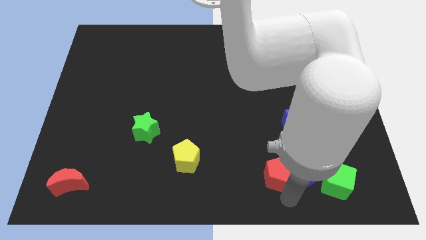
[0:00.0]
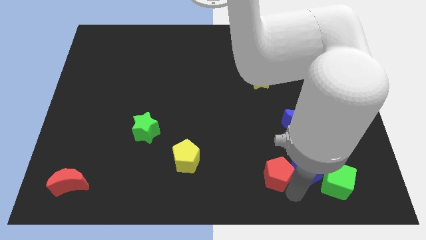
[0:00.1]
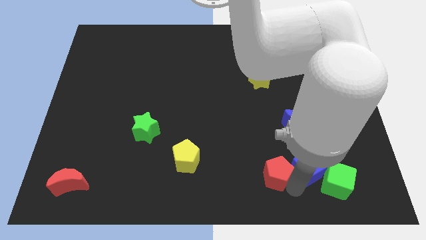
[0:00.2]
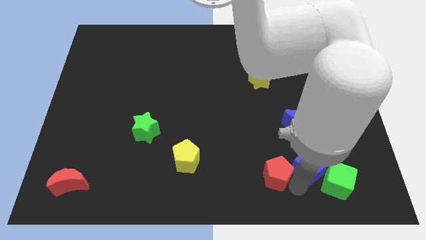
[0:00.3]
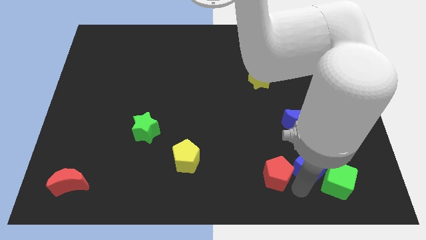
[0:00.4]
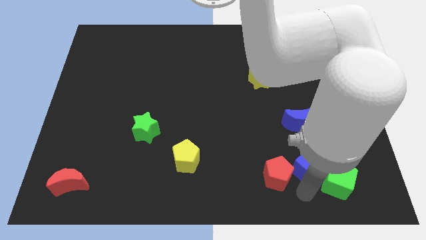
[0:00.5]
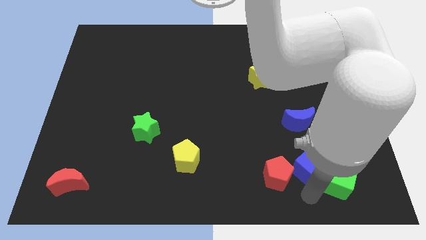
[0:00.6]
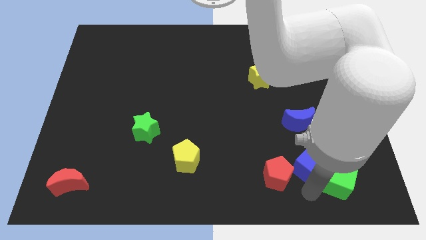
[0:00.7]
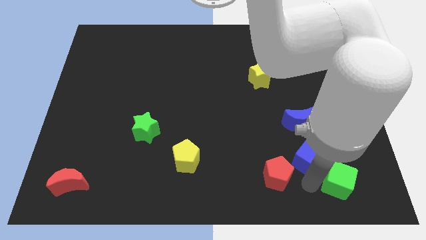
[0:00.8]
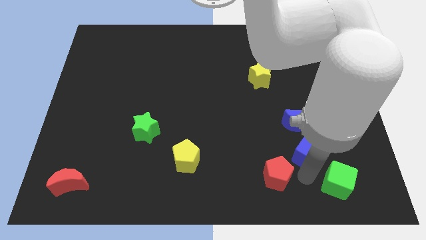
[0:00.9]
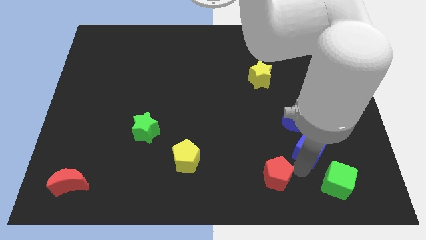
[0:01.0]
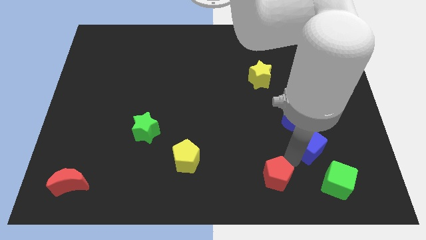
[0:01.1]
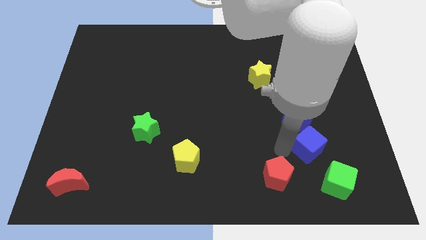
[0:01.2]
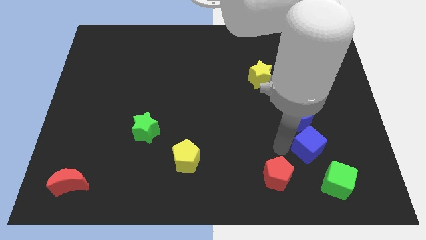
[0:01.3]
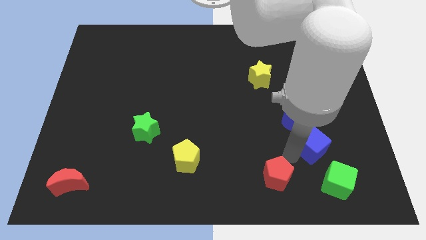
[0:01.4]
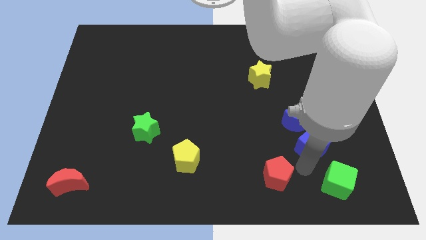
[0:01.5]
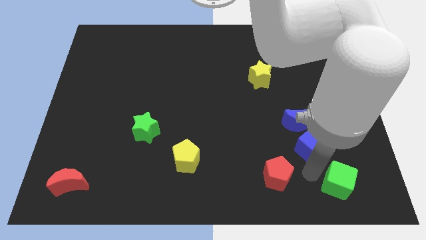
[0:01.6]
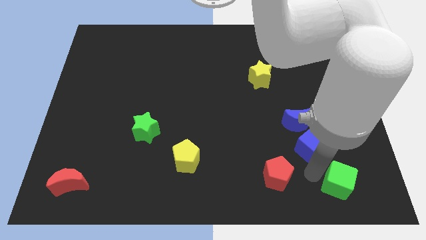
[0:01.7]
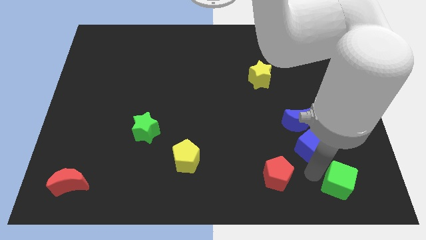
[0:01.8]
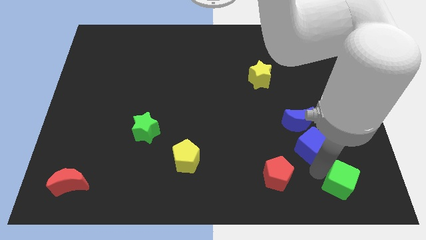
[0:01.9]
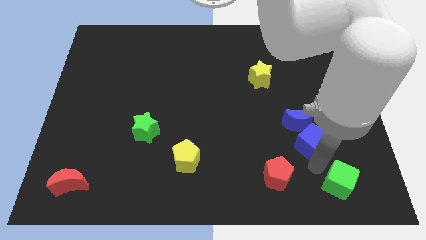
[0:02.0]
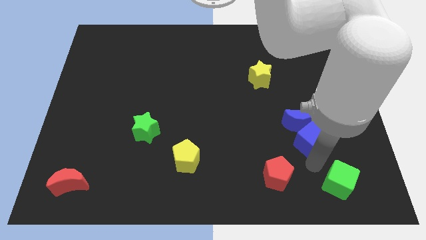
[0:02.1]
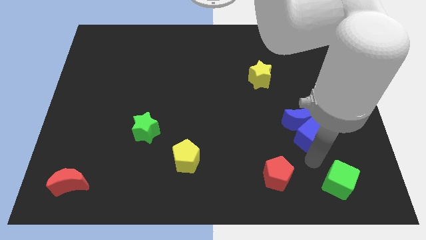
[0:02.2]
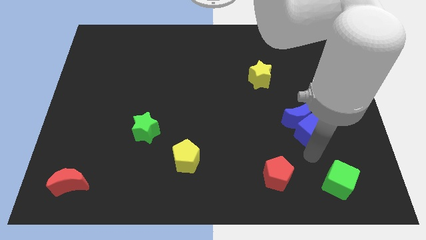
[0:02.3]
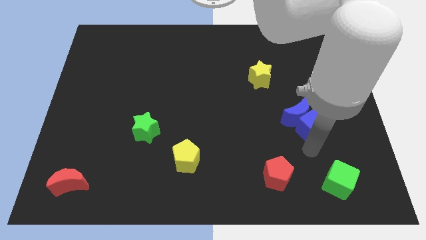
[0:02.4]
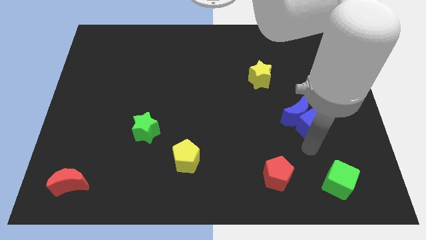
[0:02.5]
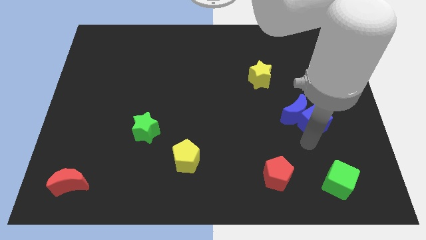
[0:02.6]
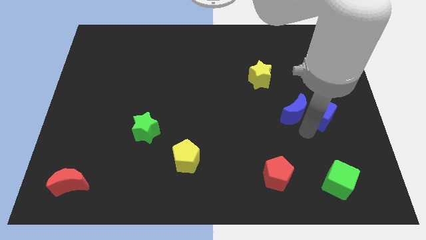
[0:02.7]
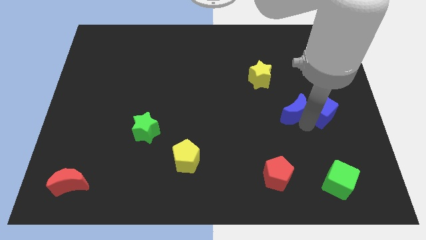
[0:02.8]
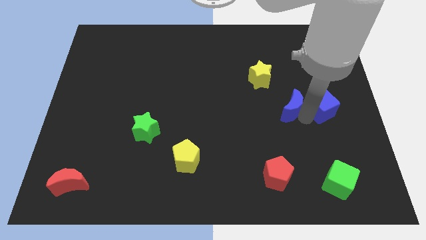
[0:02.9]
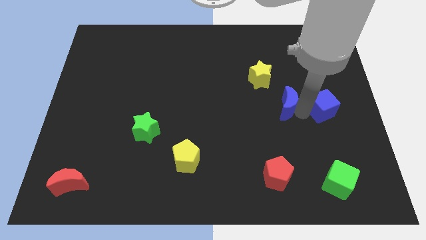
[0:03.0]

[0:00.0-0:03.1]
move the blue cube to the right of the blue crescent

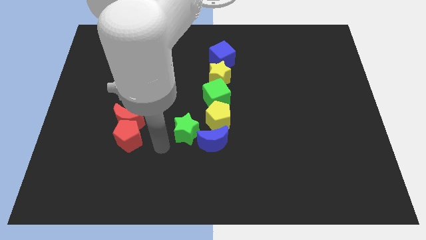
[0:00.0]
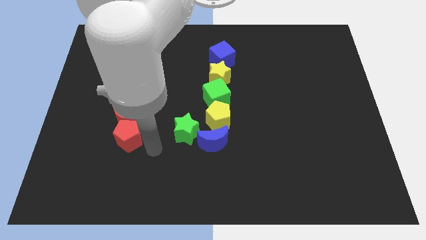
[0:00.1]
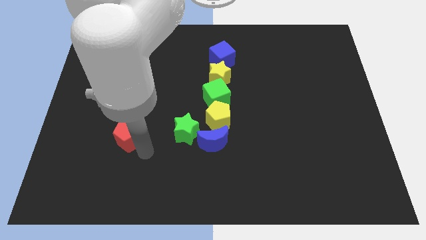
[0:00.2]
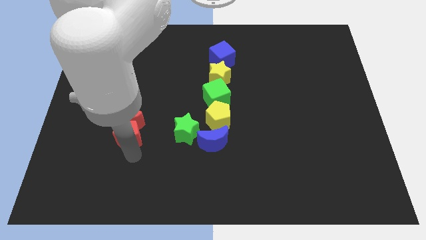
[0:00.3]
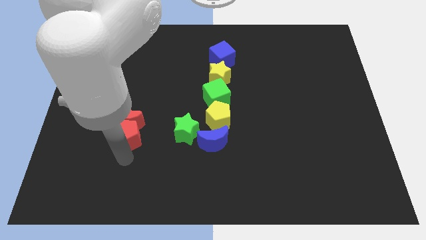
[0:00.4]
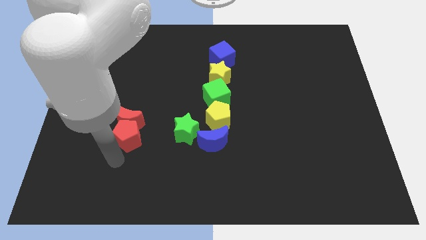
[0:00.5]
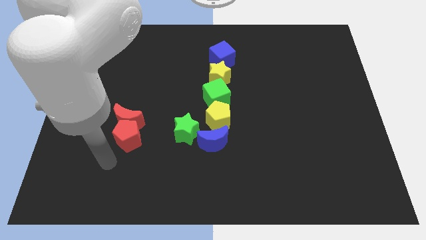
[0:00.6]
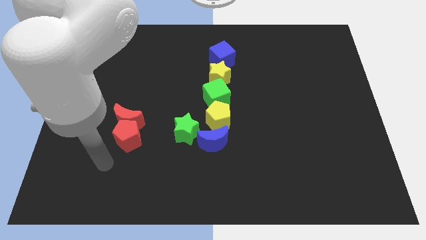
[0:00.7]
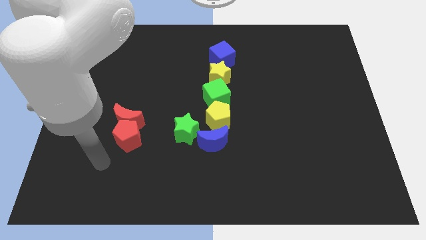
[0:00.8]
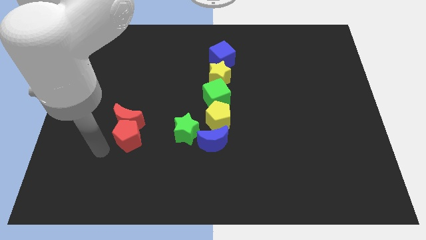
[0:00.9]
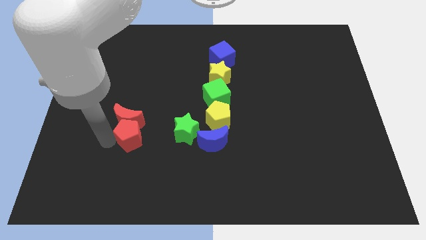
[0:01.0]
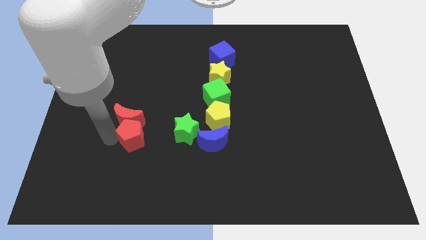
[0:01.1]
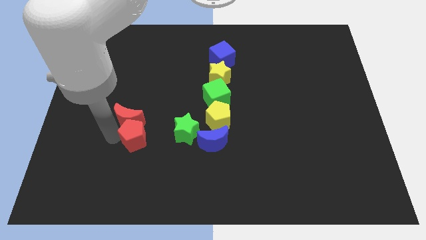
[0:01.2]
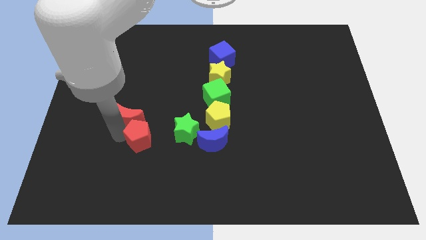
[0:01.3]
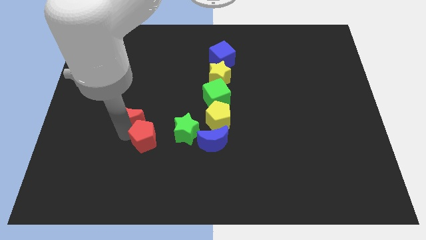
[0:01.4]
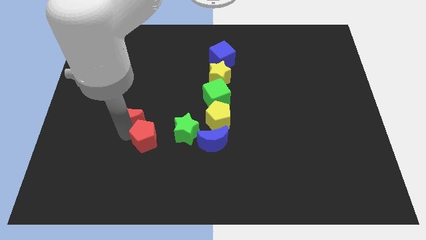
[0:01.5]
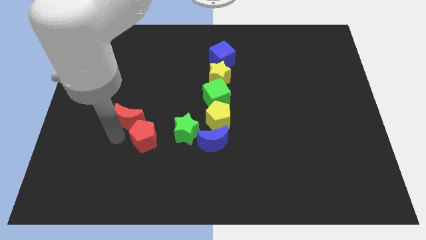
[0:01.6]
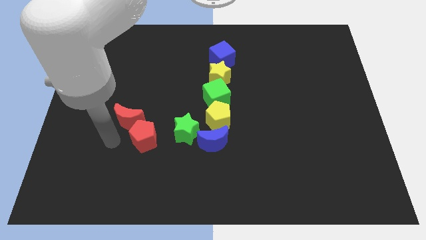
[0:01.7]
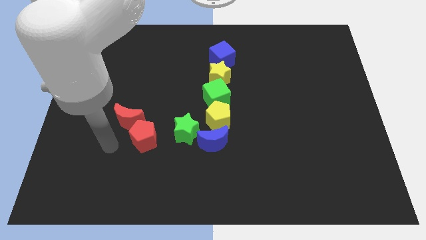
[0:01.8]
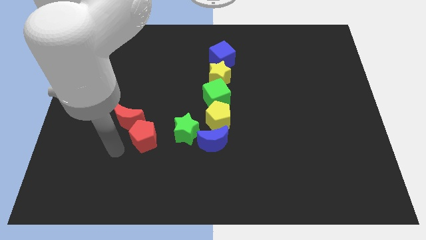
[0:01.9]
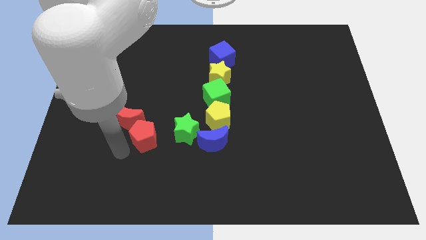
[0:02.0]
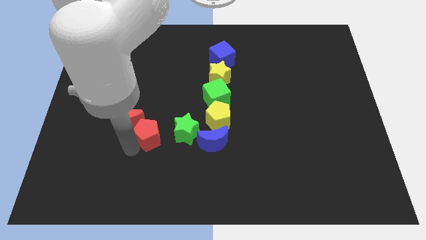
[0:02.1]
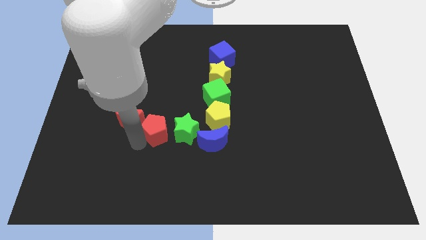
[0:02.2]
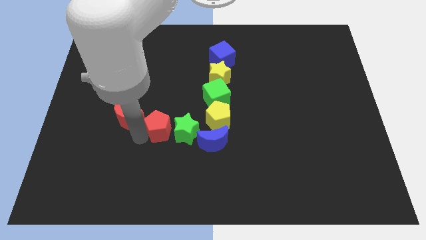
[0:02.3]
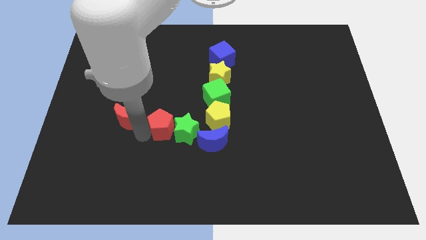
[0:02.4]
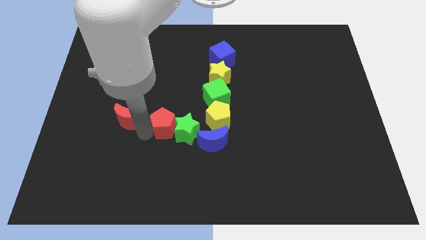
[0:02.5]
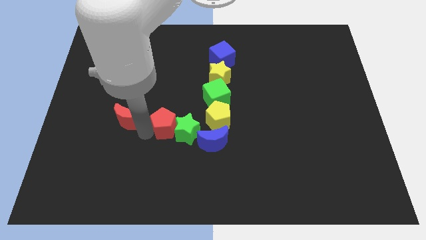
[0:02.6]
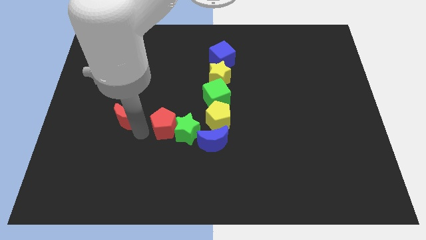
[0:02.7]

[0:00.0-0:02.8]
push the red pentagon to the left of the green star

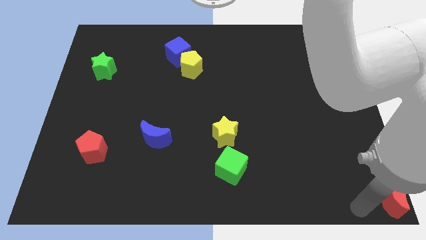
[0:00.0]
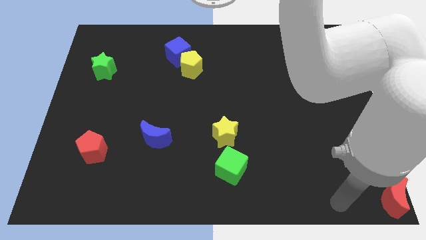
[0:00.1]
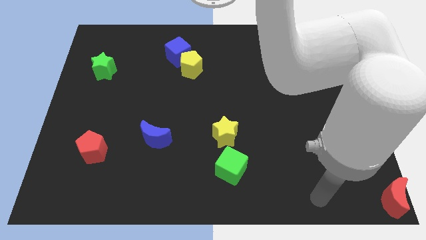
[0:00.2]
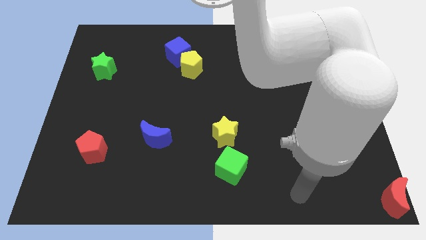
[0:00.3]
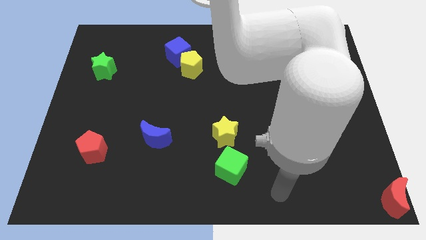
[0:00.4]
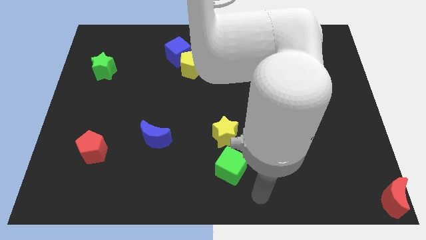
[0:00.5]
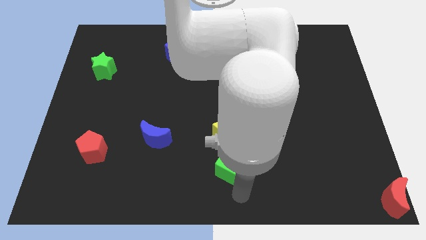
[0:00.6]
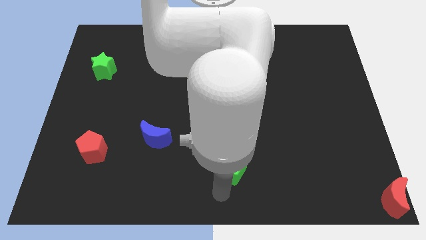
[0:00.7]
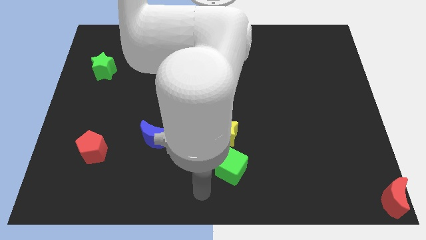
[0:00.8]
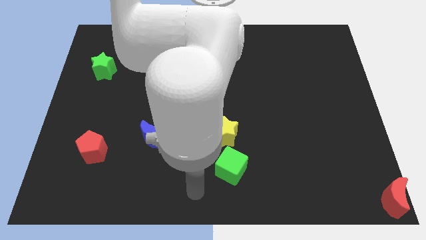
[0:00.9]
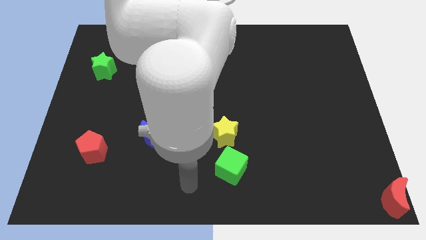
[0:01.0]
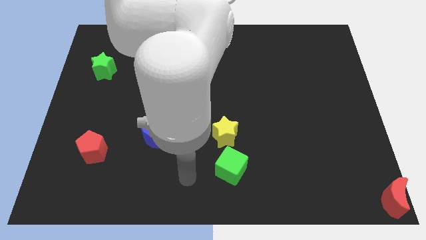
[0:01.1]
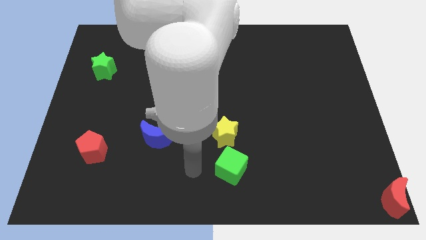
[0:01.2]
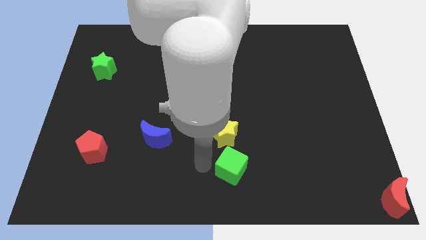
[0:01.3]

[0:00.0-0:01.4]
move your arm towards the green cube

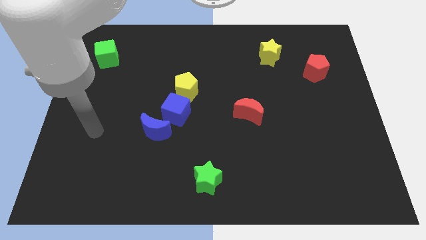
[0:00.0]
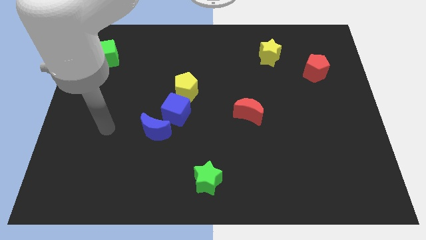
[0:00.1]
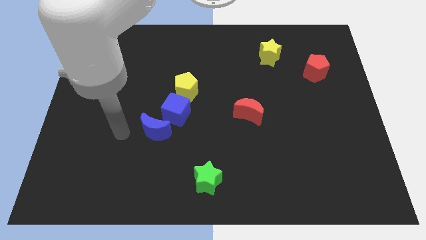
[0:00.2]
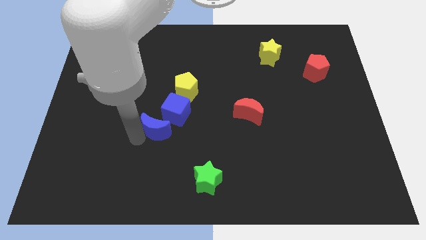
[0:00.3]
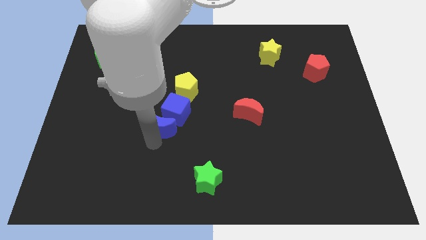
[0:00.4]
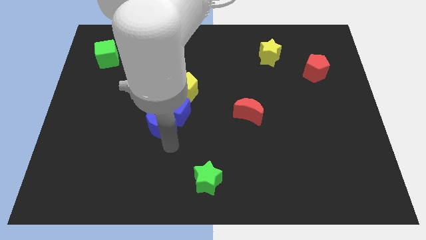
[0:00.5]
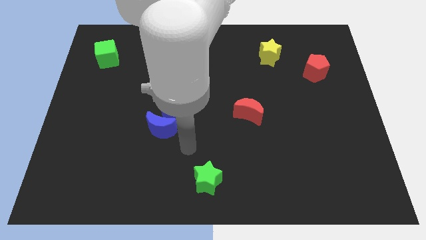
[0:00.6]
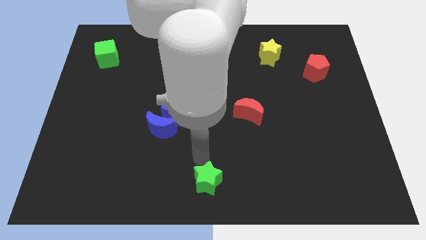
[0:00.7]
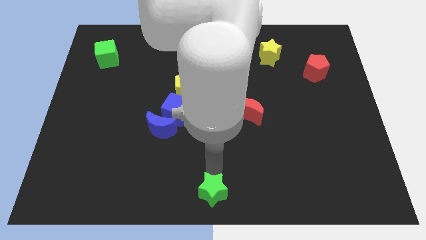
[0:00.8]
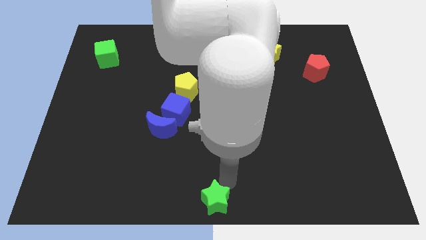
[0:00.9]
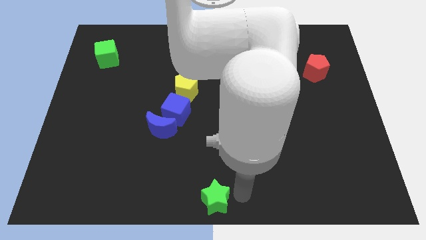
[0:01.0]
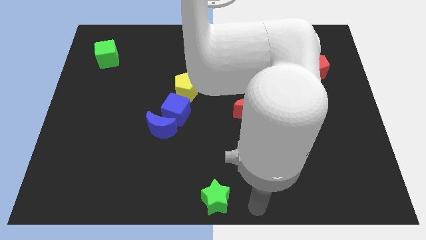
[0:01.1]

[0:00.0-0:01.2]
move the arm into the green star

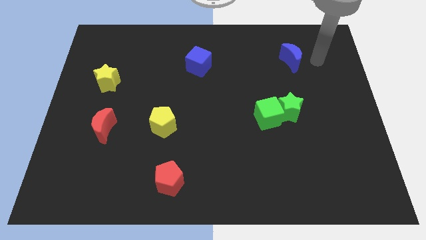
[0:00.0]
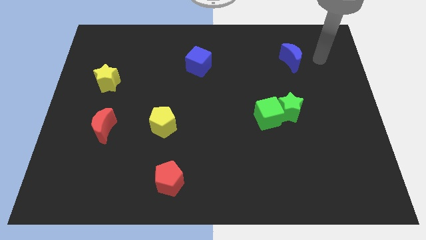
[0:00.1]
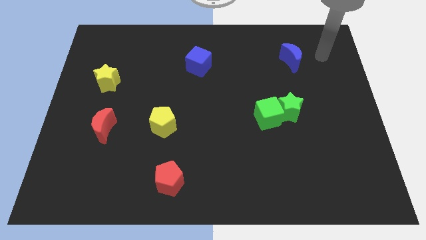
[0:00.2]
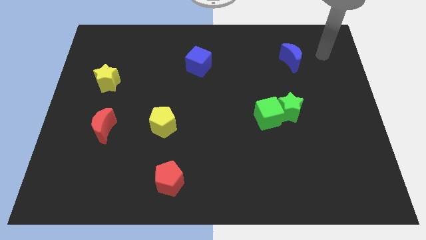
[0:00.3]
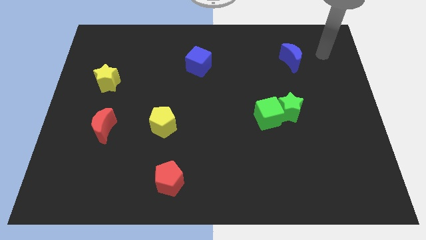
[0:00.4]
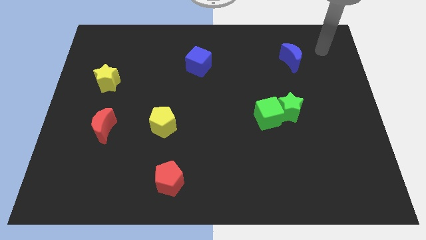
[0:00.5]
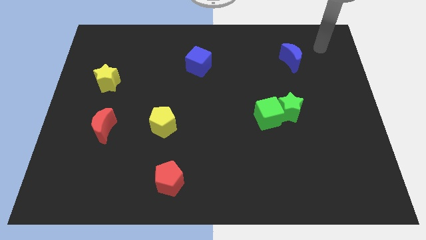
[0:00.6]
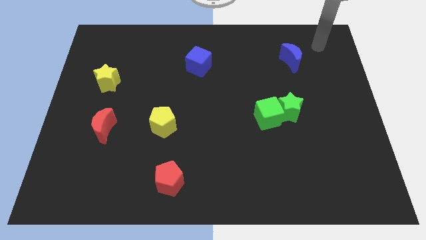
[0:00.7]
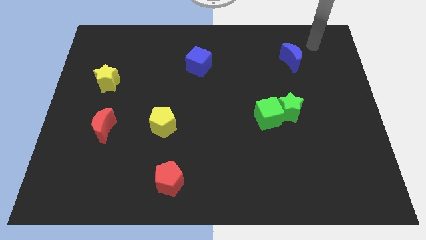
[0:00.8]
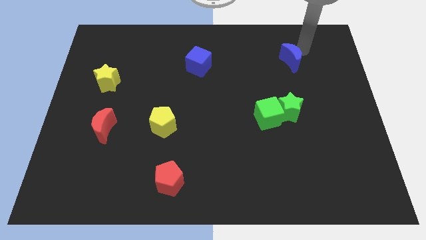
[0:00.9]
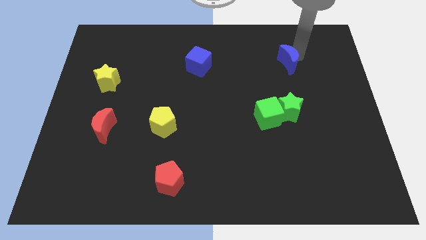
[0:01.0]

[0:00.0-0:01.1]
place your arm towards right side of blue crescent
